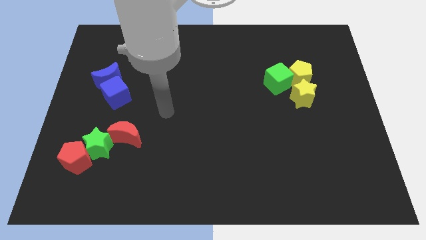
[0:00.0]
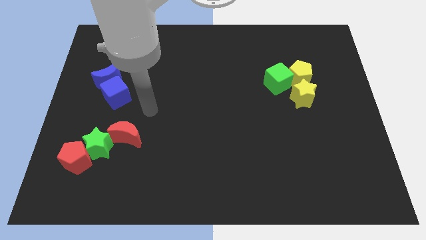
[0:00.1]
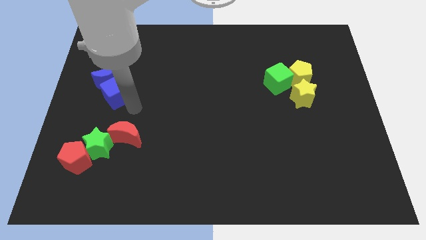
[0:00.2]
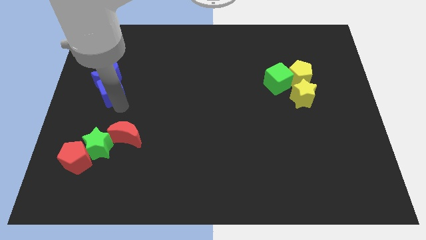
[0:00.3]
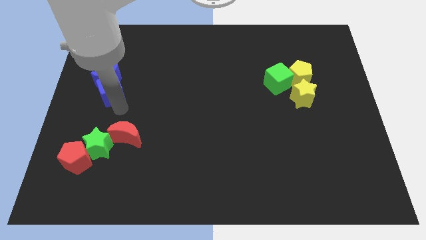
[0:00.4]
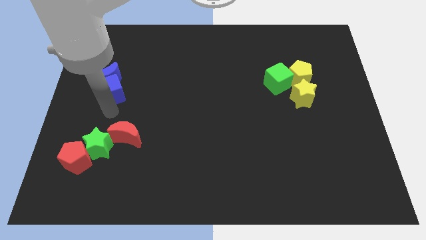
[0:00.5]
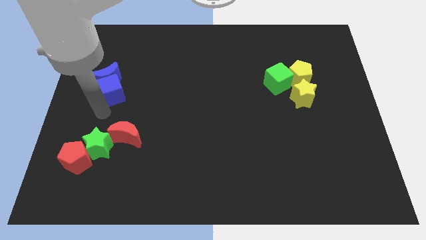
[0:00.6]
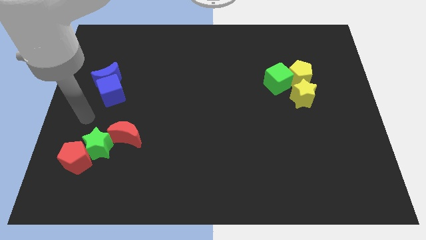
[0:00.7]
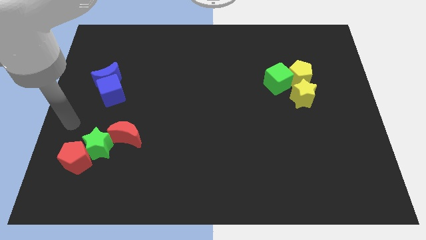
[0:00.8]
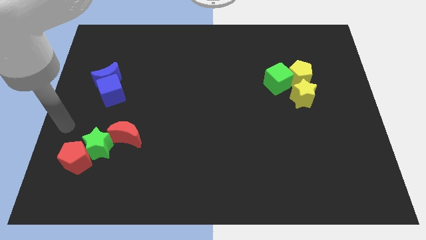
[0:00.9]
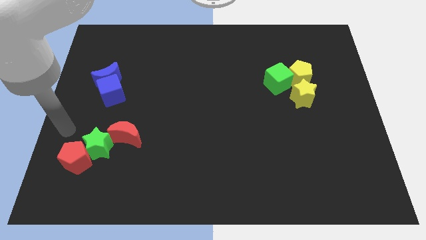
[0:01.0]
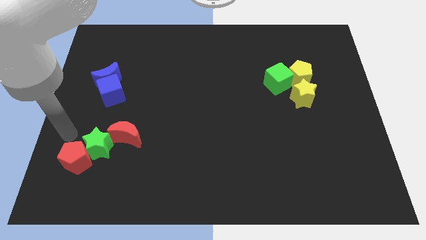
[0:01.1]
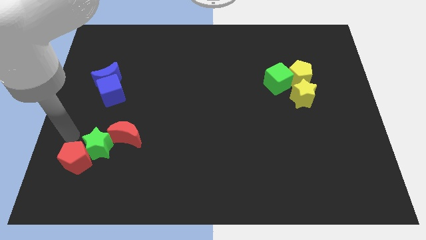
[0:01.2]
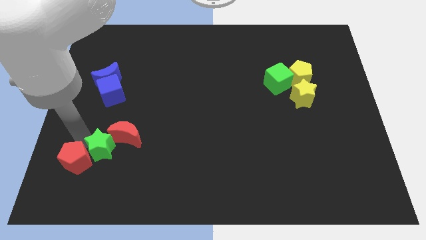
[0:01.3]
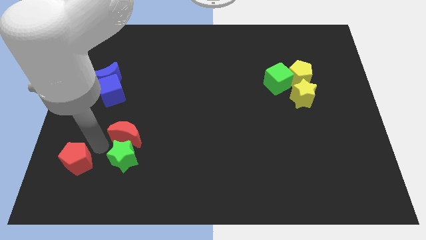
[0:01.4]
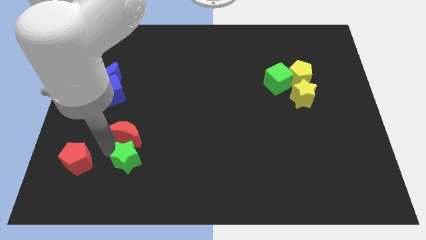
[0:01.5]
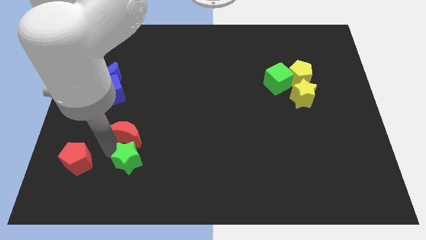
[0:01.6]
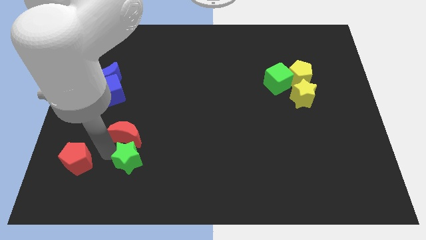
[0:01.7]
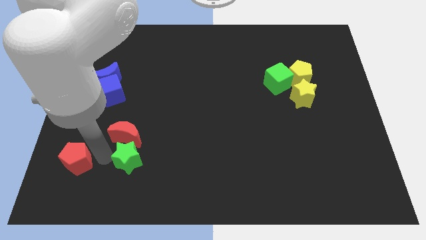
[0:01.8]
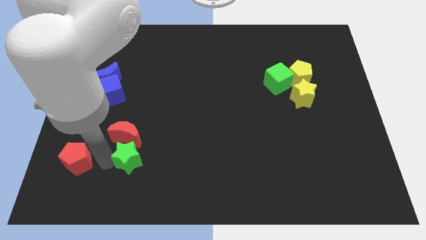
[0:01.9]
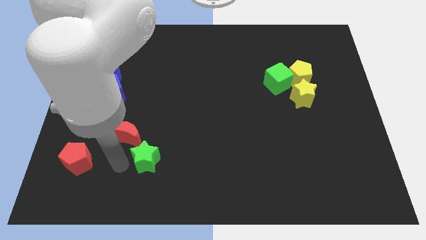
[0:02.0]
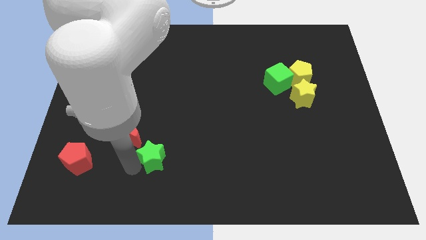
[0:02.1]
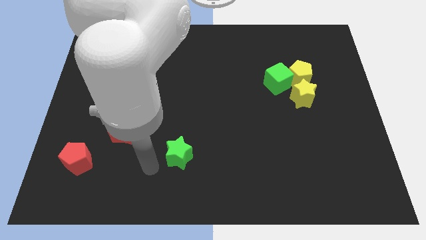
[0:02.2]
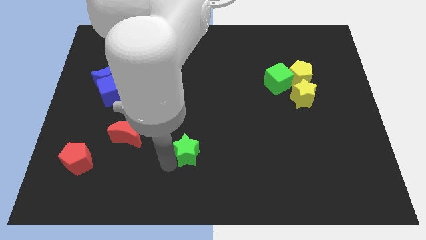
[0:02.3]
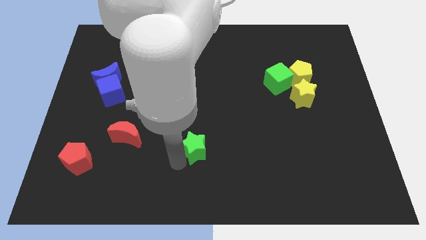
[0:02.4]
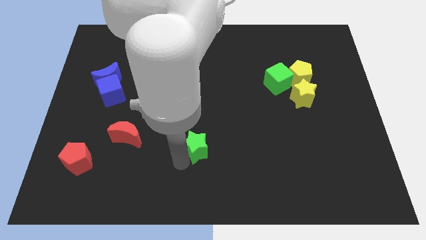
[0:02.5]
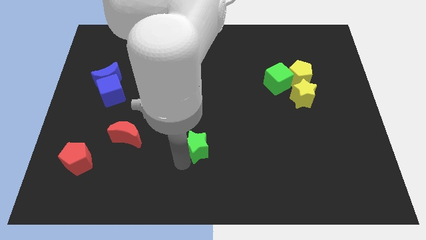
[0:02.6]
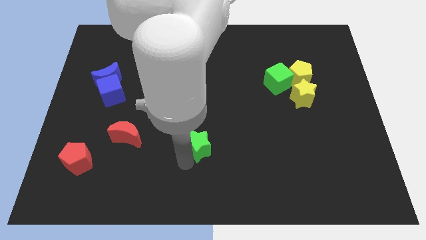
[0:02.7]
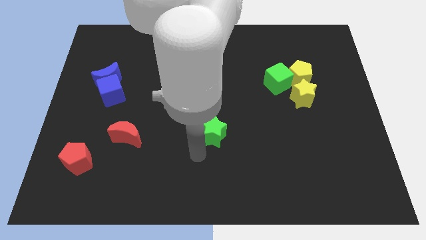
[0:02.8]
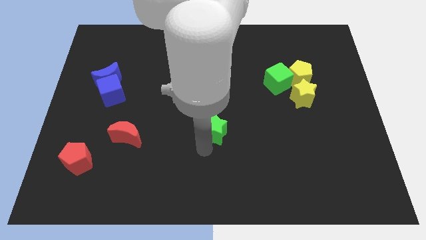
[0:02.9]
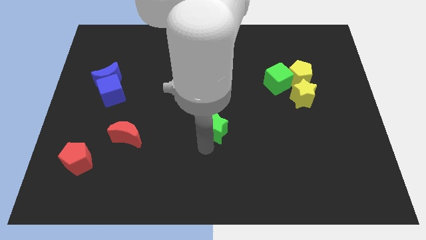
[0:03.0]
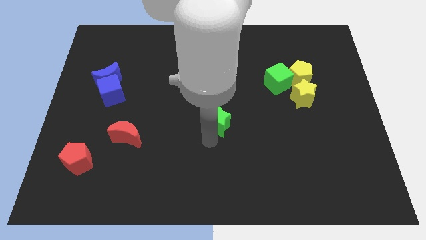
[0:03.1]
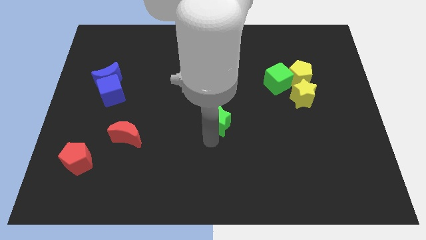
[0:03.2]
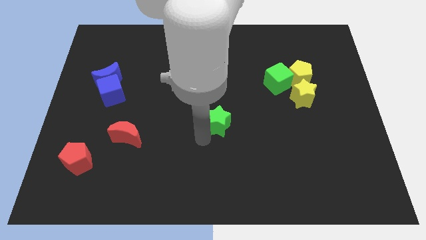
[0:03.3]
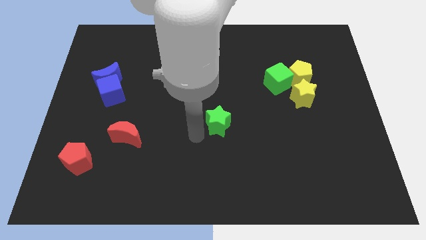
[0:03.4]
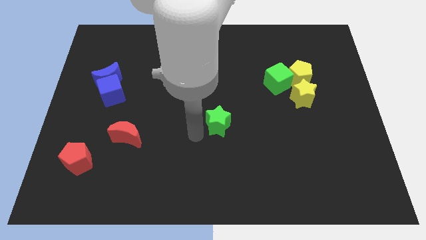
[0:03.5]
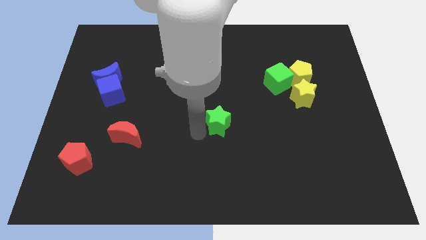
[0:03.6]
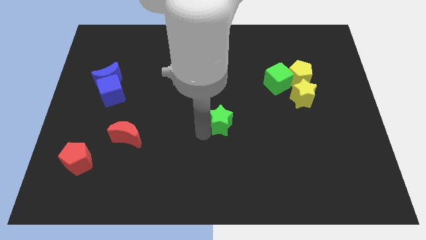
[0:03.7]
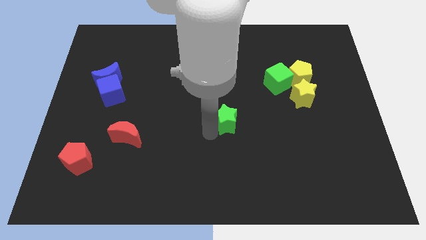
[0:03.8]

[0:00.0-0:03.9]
place the green star in between red crescent and yellow star

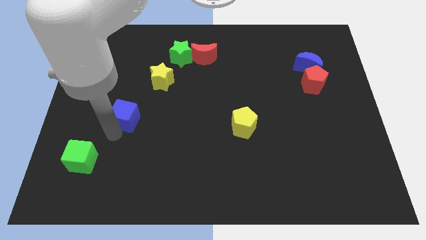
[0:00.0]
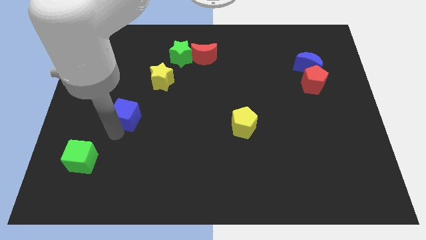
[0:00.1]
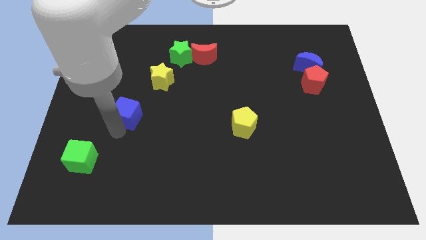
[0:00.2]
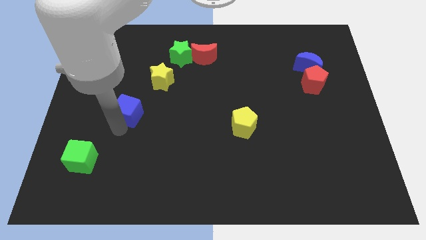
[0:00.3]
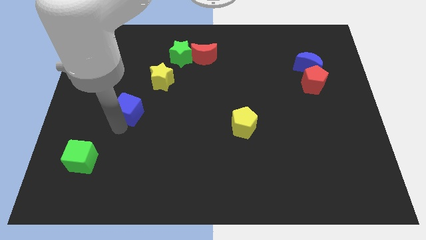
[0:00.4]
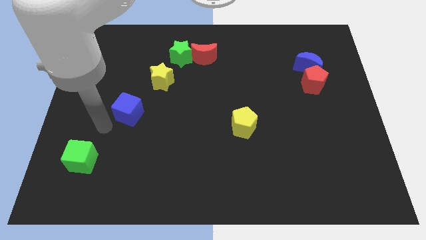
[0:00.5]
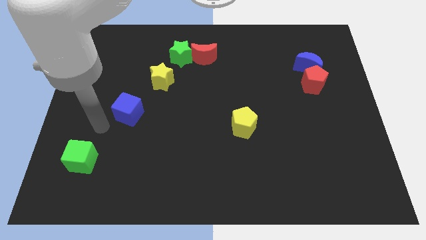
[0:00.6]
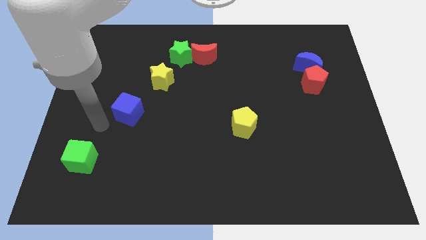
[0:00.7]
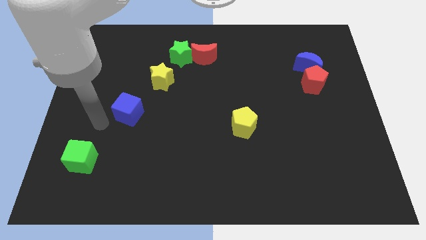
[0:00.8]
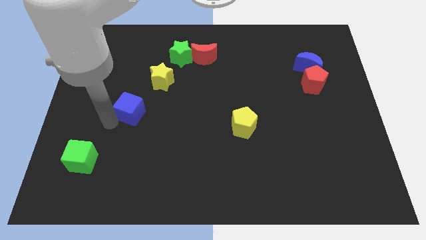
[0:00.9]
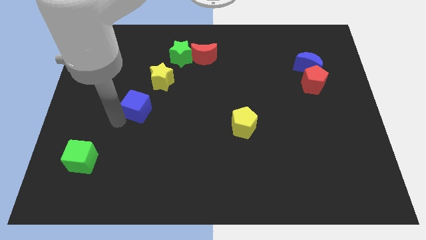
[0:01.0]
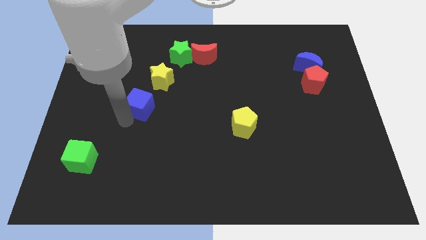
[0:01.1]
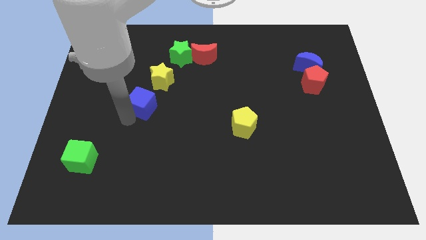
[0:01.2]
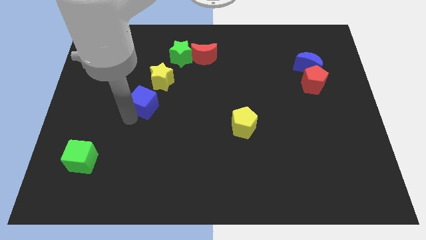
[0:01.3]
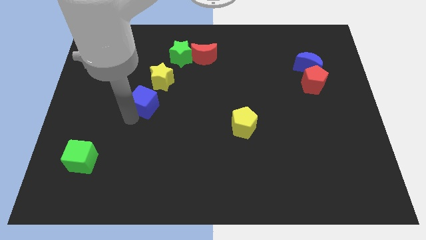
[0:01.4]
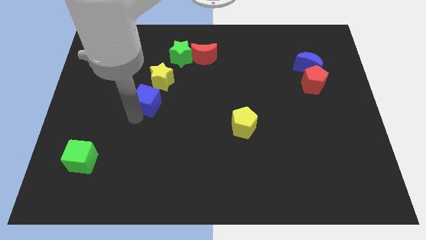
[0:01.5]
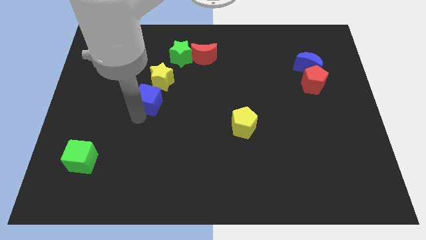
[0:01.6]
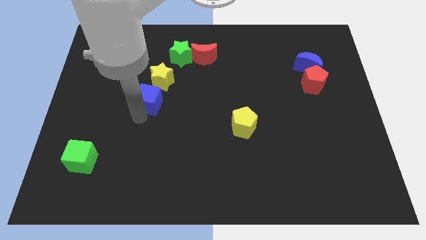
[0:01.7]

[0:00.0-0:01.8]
move the blue cube close to the yellow star

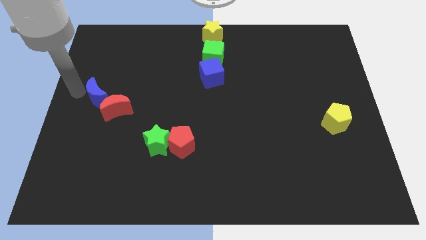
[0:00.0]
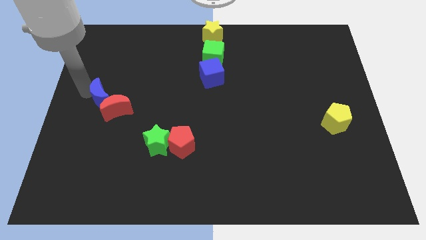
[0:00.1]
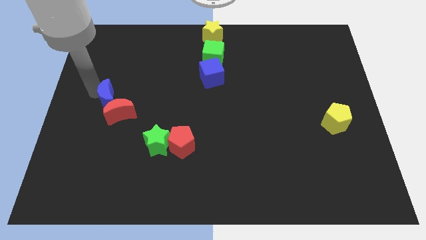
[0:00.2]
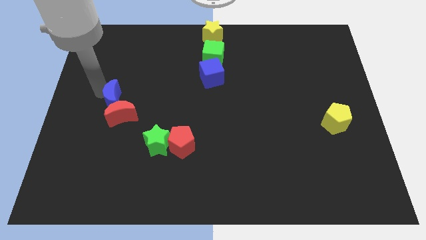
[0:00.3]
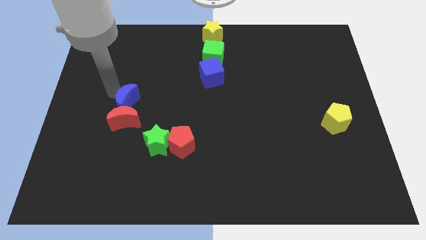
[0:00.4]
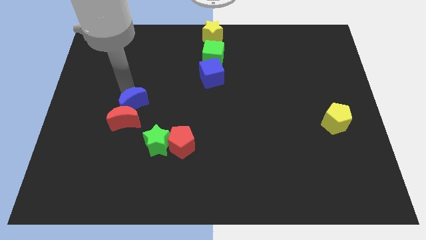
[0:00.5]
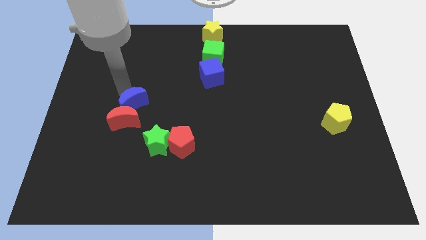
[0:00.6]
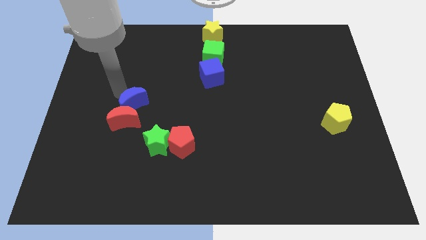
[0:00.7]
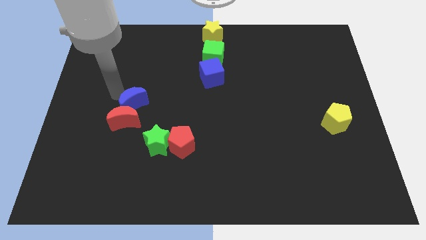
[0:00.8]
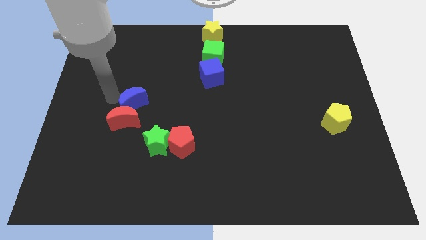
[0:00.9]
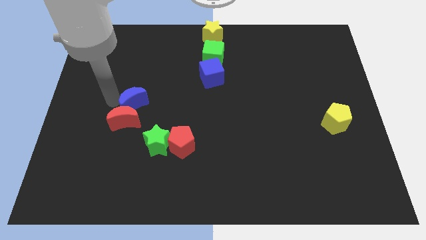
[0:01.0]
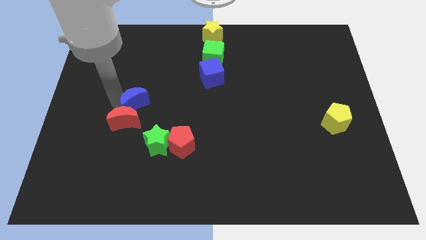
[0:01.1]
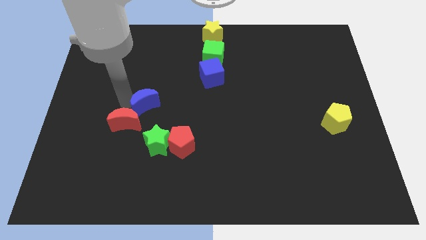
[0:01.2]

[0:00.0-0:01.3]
push the blue moon into the red moon

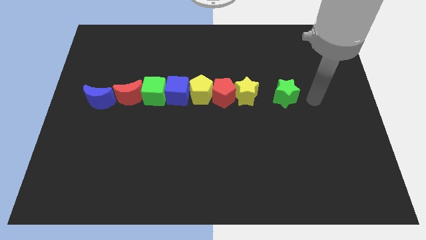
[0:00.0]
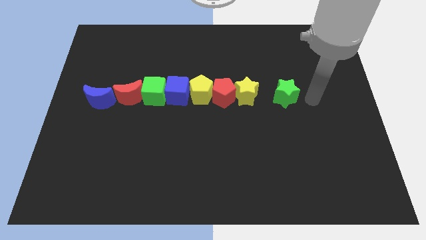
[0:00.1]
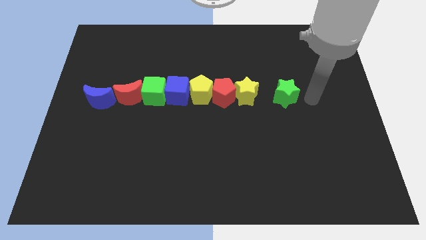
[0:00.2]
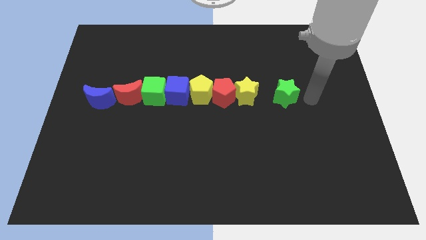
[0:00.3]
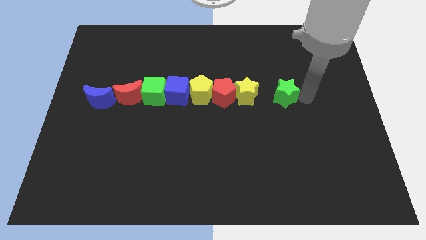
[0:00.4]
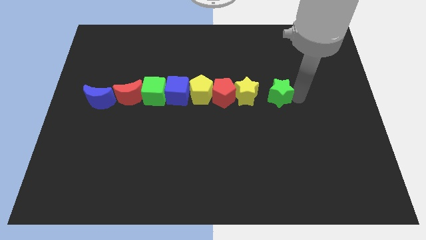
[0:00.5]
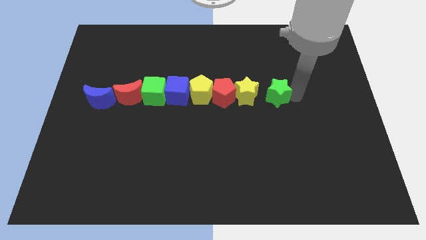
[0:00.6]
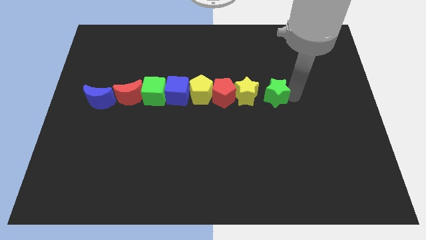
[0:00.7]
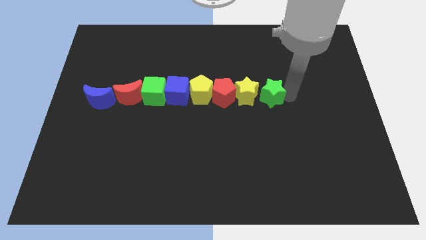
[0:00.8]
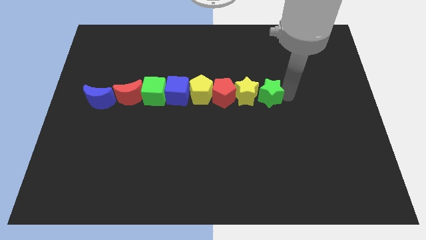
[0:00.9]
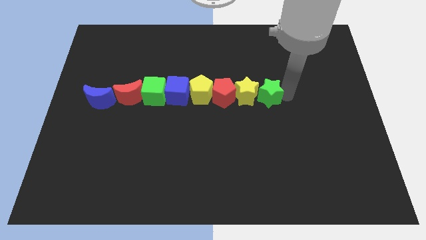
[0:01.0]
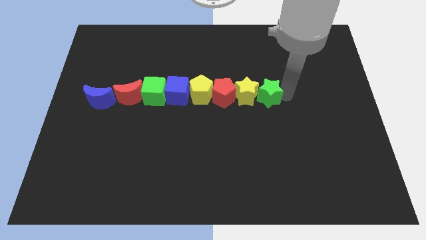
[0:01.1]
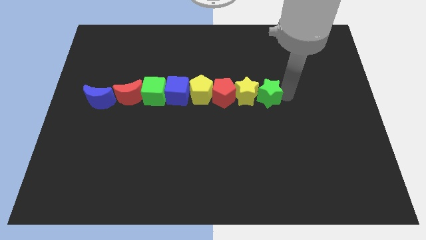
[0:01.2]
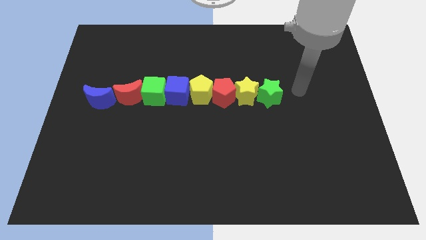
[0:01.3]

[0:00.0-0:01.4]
move the green star close to the yellow star

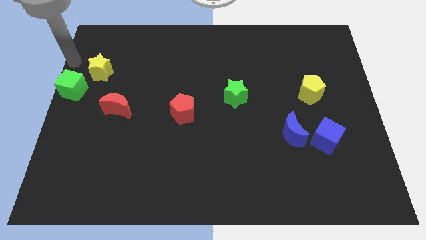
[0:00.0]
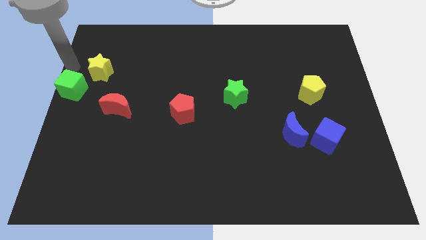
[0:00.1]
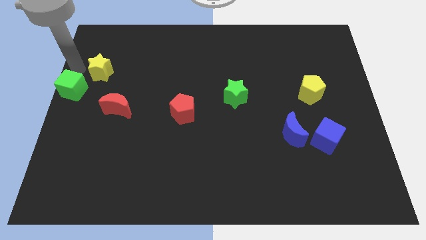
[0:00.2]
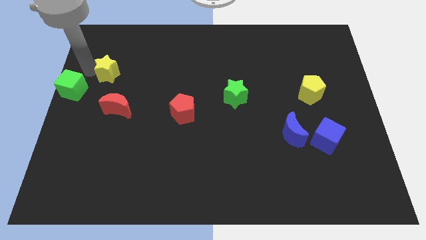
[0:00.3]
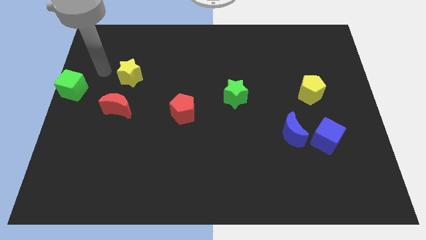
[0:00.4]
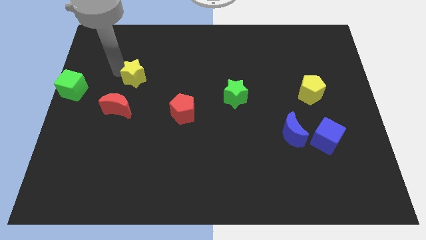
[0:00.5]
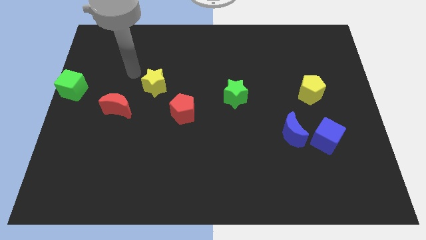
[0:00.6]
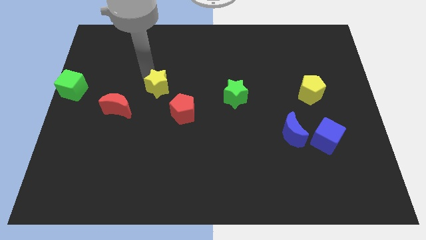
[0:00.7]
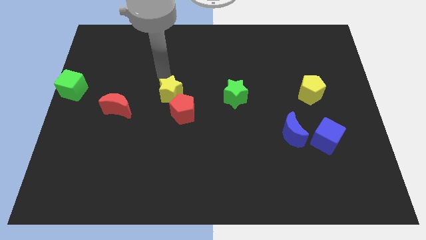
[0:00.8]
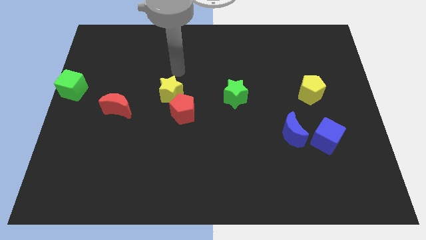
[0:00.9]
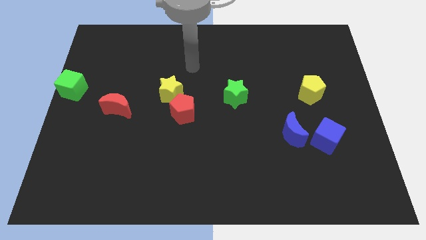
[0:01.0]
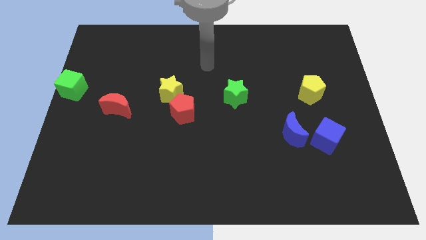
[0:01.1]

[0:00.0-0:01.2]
push the yellow star to the top left of the red pentagon
